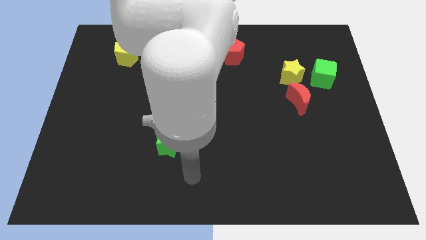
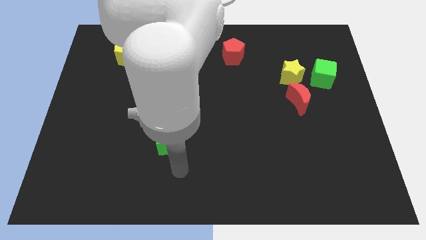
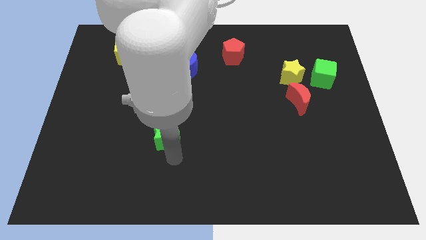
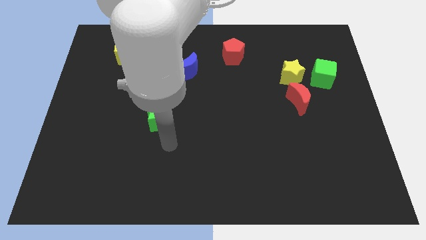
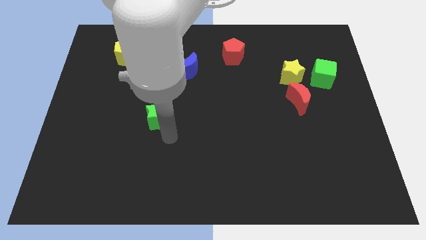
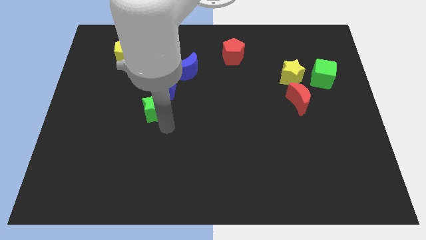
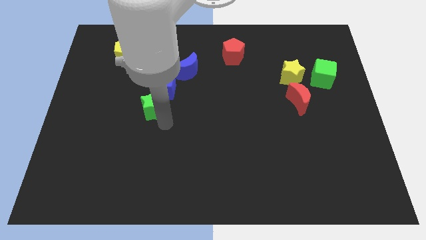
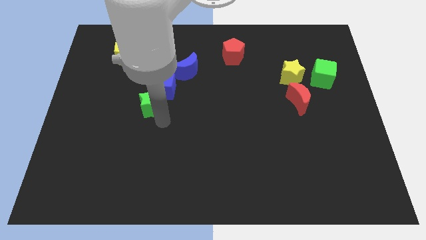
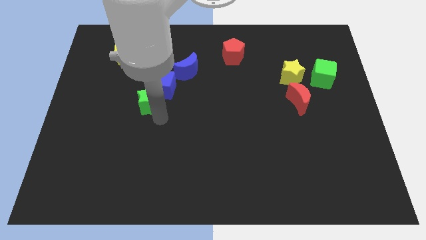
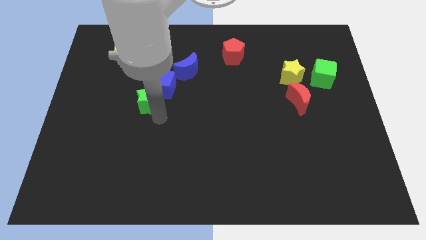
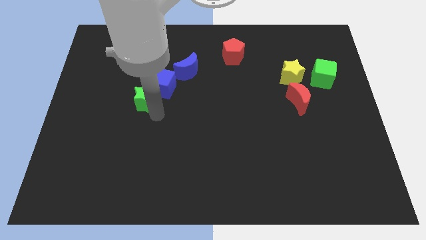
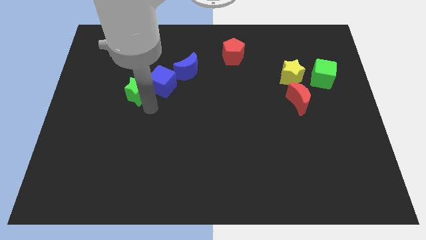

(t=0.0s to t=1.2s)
push the green star to the bottom left of the blue cube

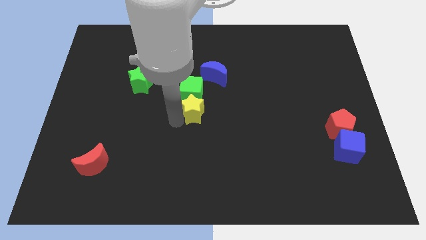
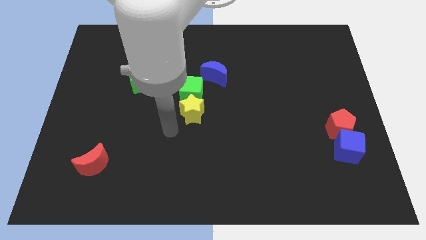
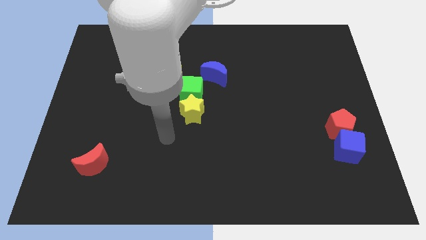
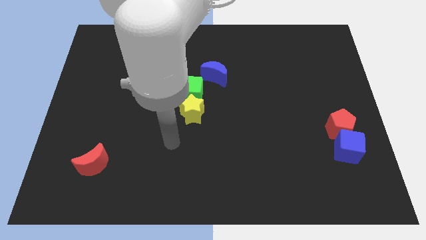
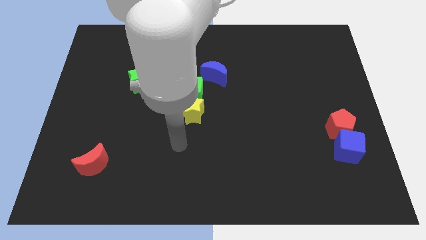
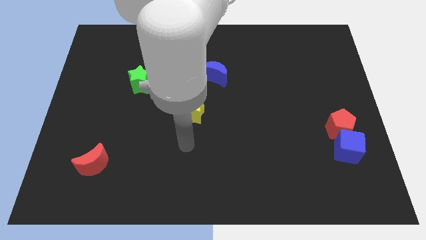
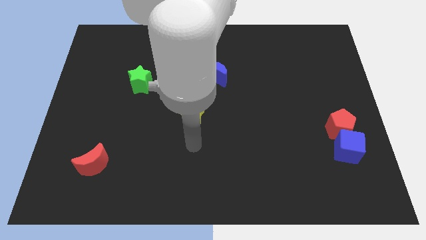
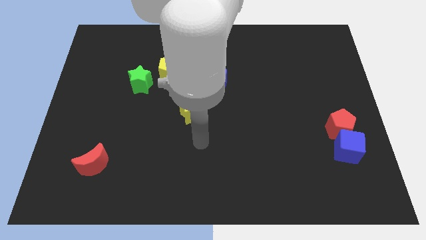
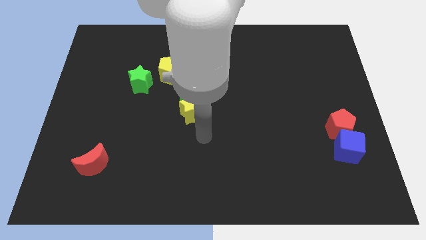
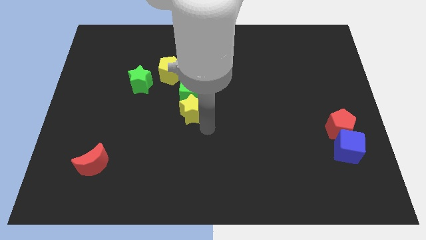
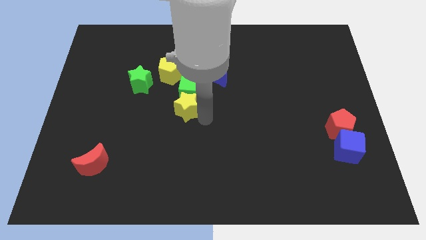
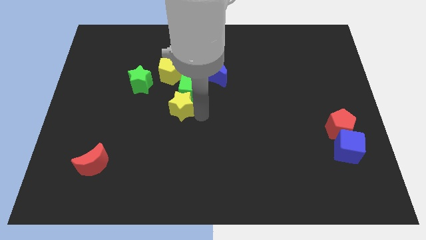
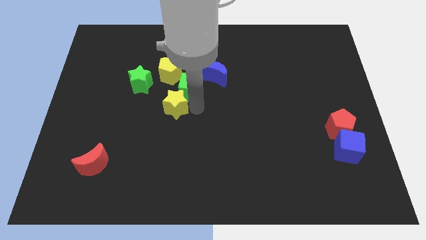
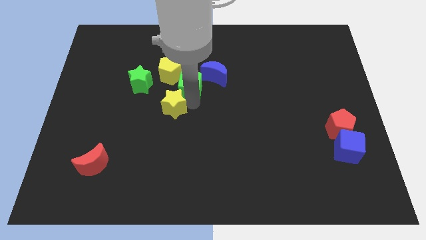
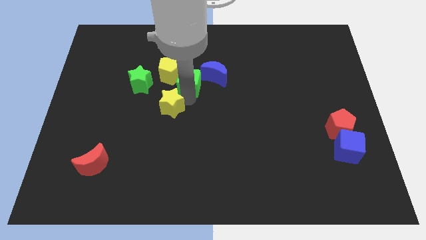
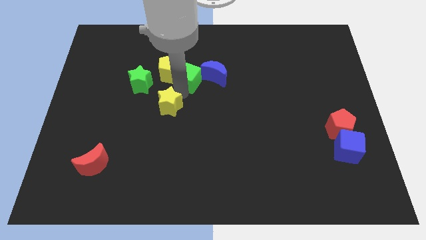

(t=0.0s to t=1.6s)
place the yellow star diagonally bottom right to the green star

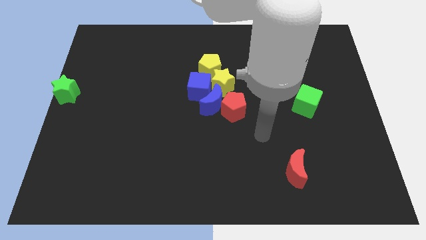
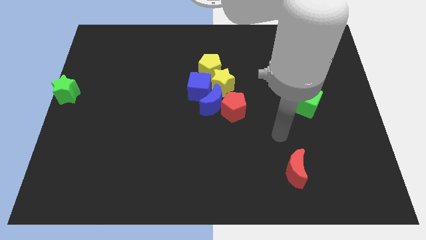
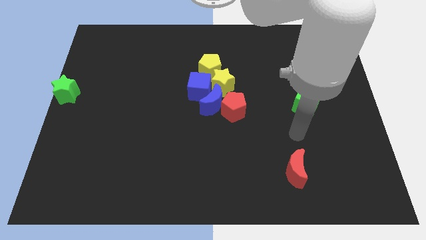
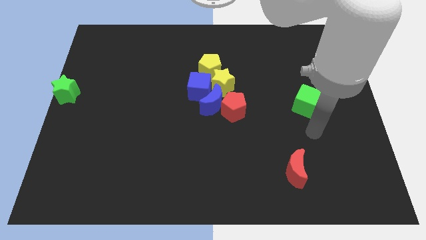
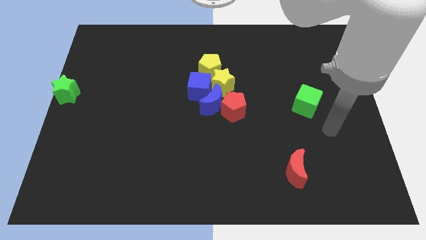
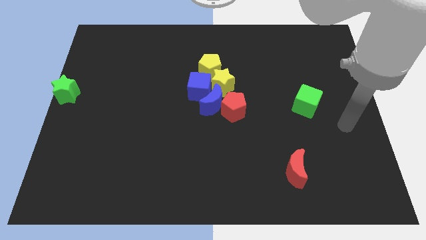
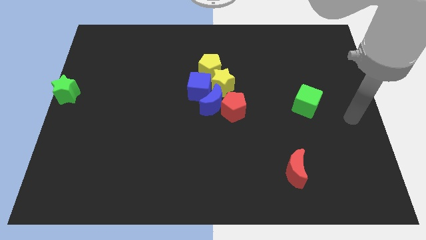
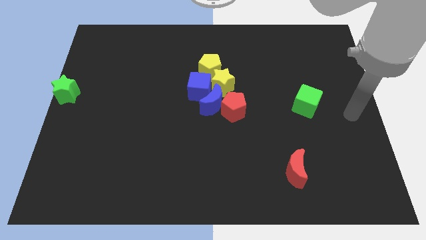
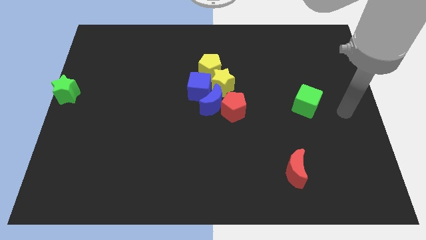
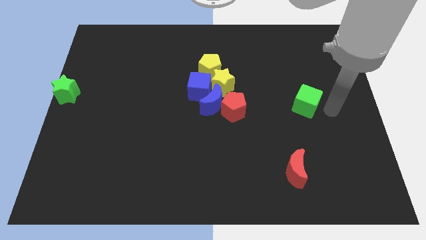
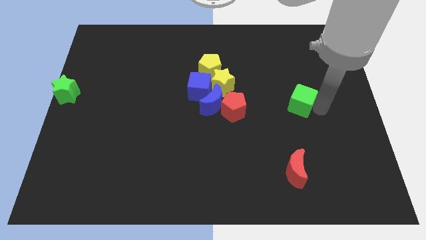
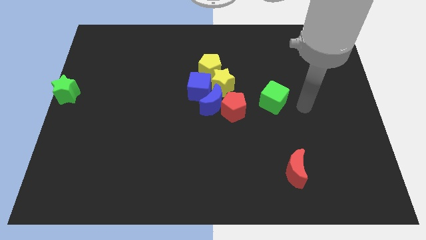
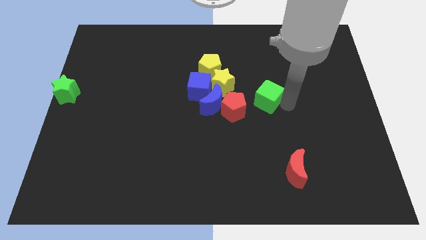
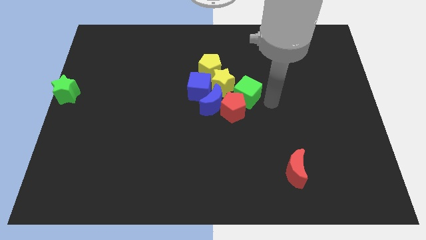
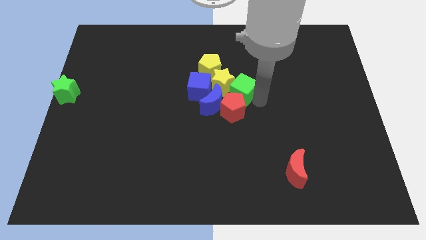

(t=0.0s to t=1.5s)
add the green cube to the group of blocks at the center of the board

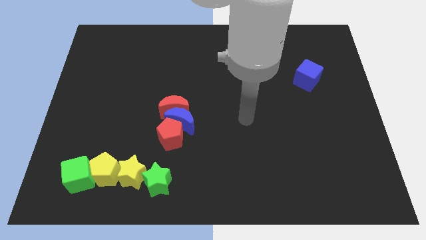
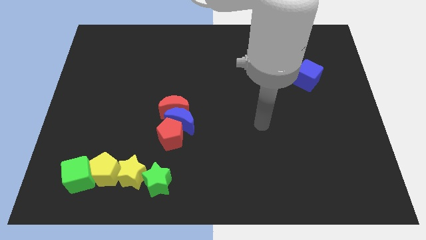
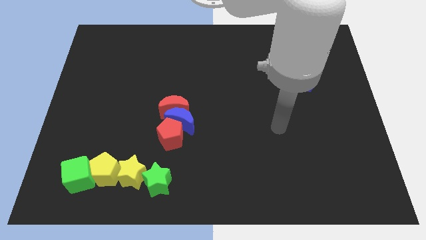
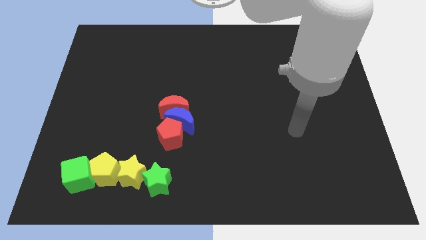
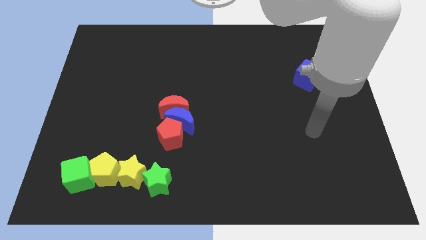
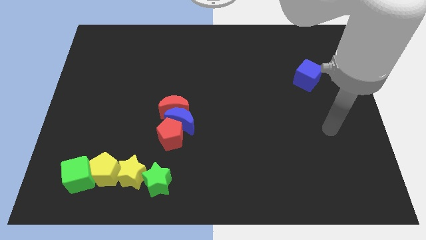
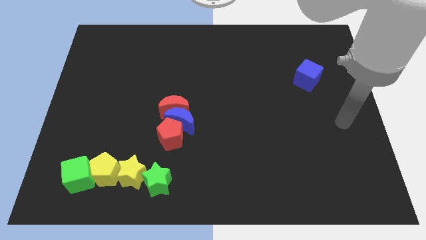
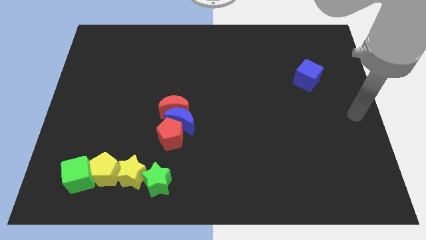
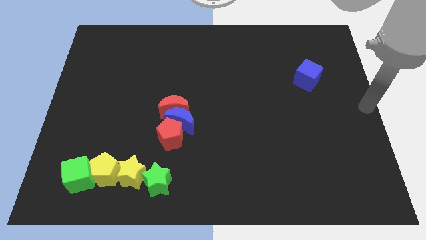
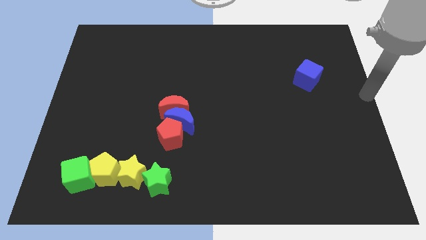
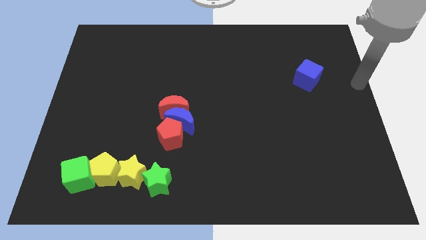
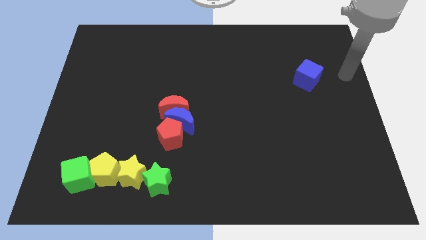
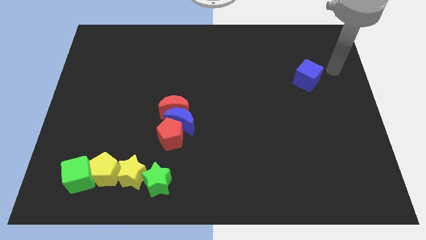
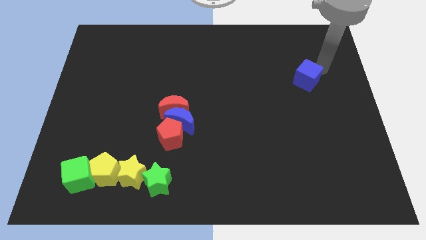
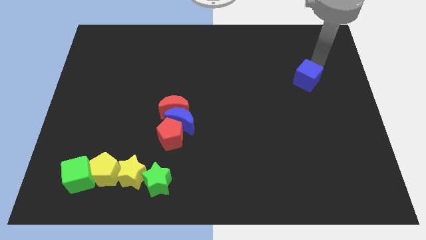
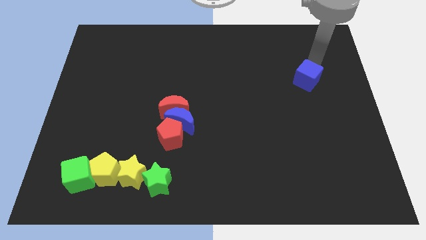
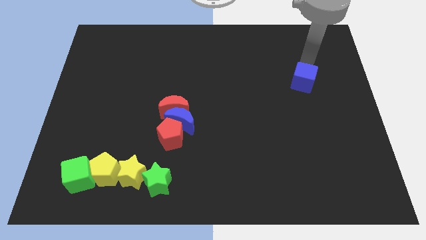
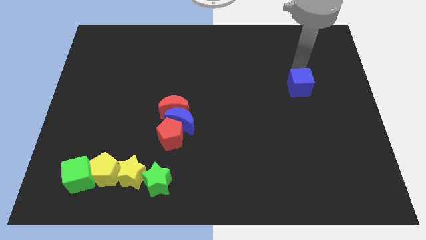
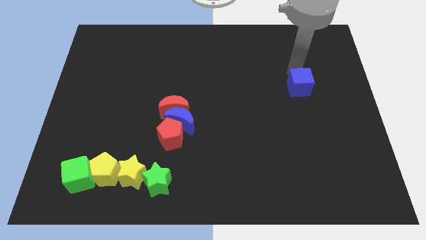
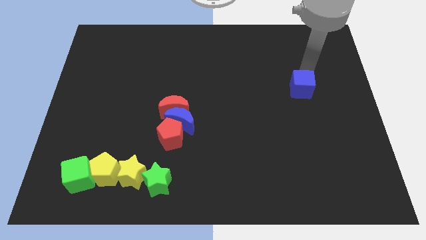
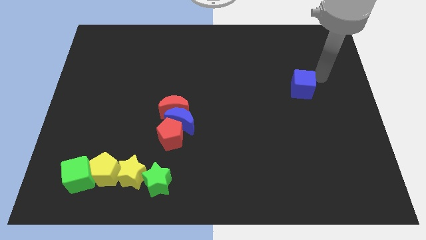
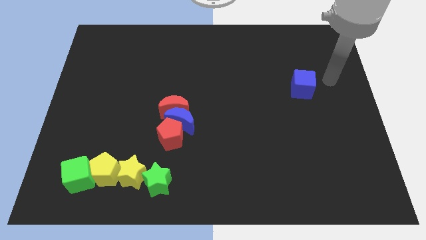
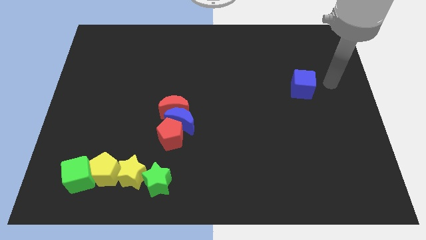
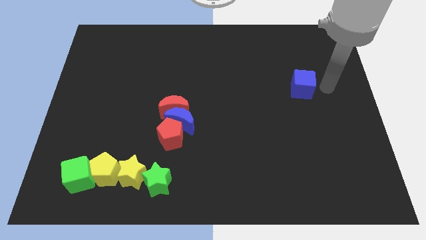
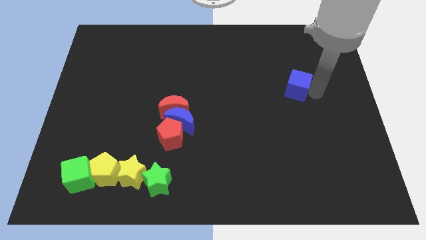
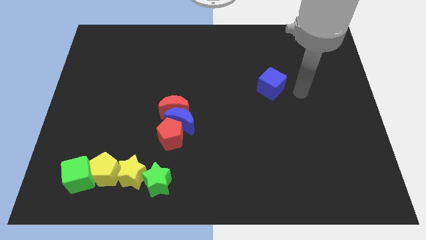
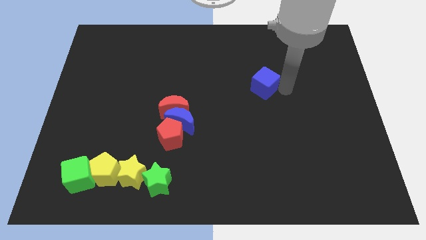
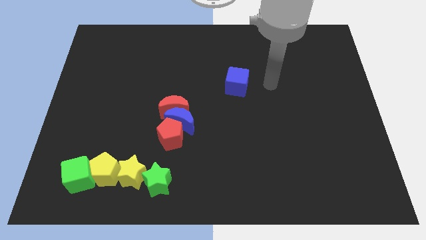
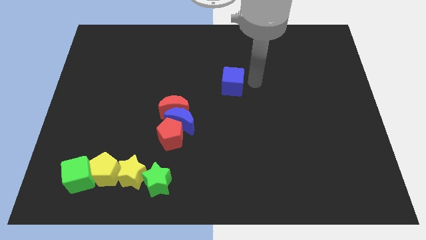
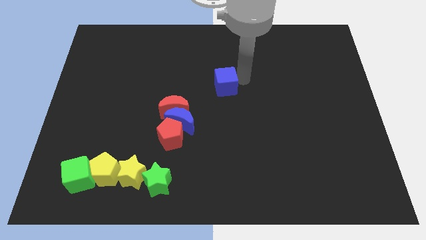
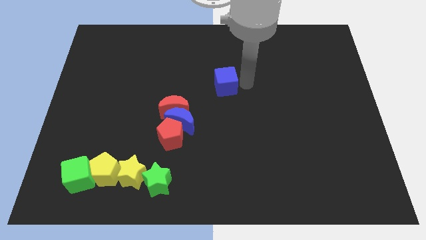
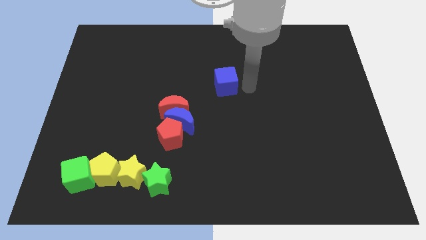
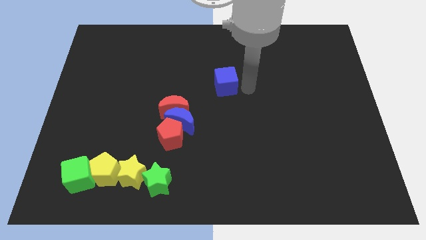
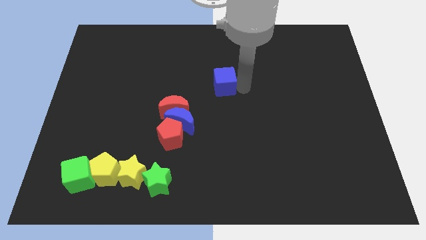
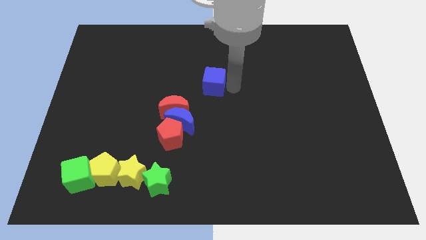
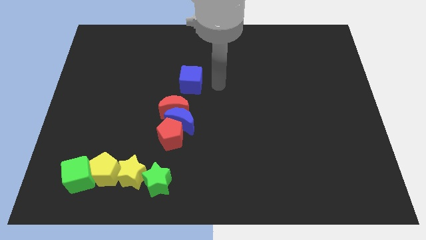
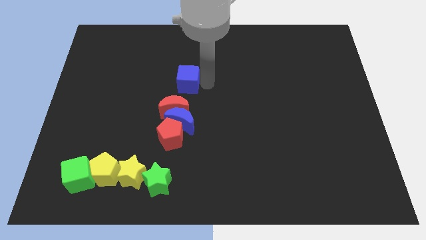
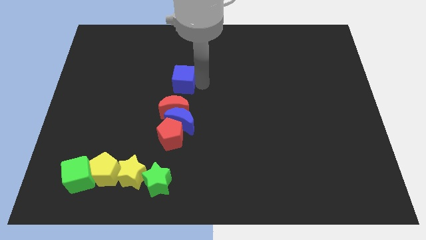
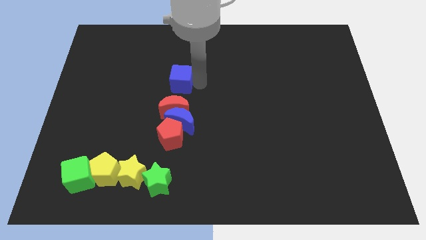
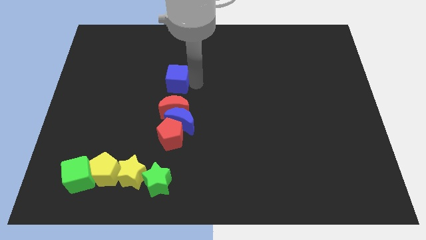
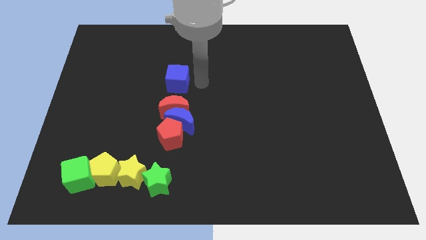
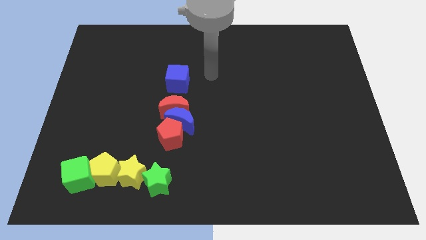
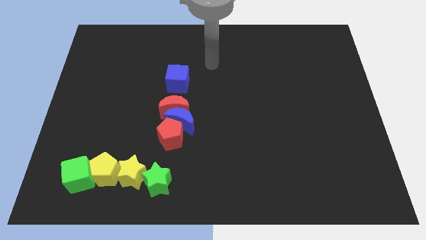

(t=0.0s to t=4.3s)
place the blue cube above the red moon

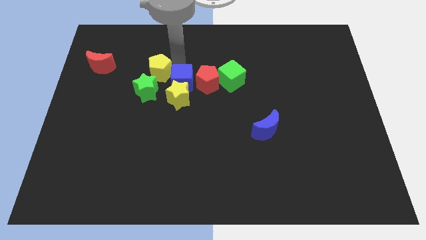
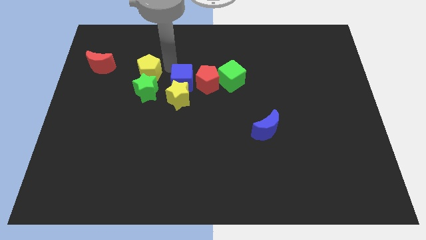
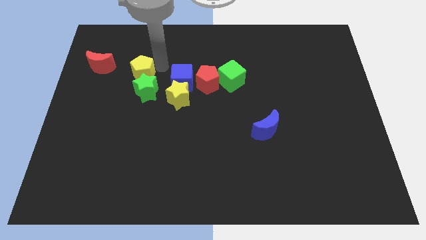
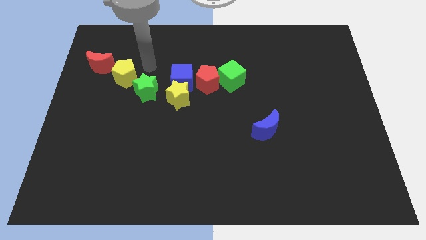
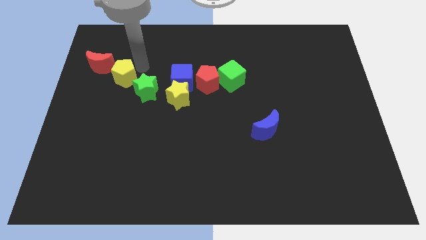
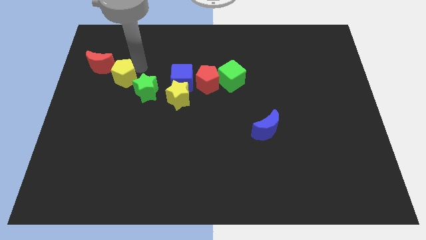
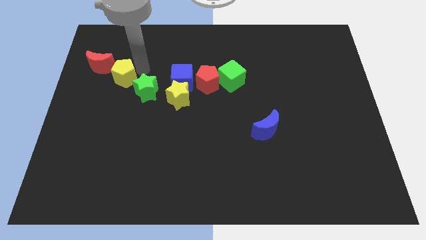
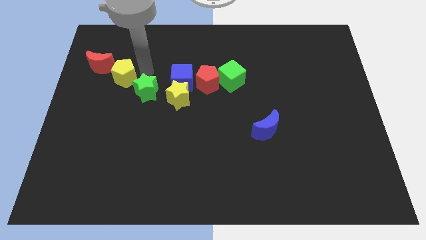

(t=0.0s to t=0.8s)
place the yellow pentagon between the red moon and green star
